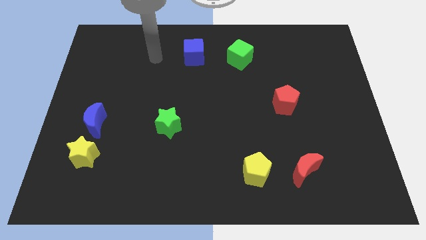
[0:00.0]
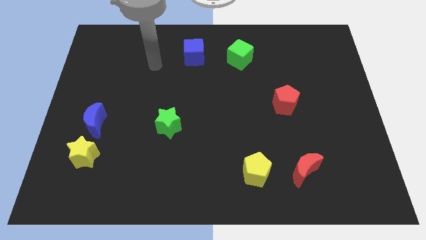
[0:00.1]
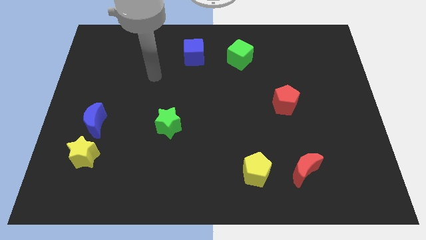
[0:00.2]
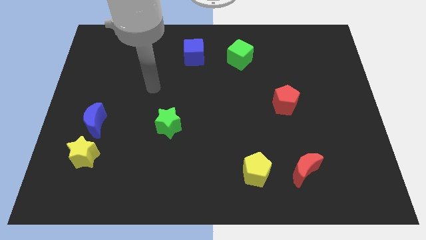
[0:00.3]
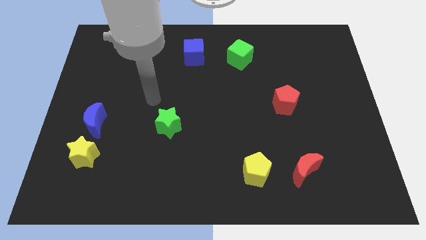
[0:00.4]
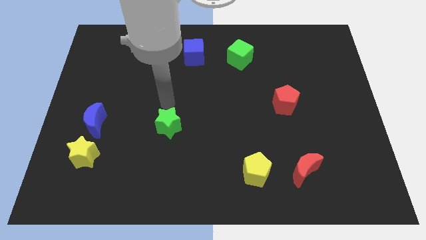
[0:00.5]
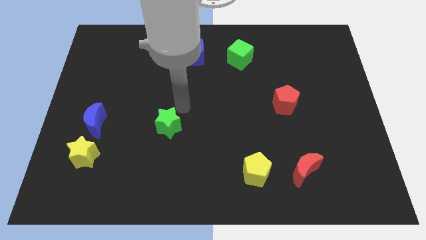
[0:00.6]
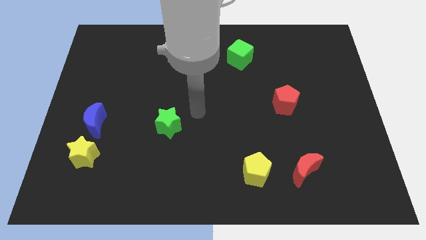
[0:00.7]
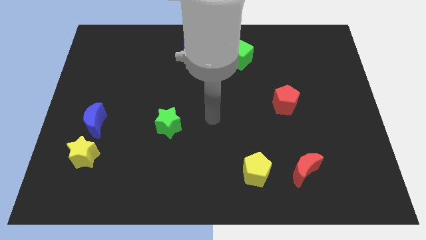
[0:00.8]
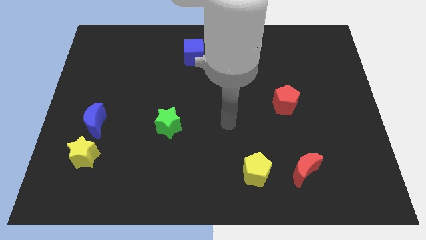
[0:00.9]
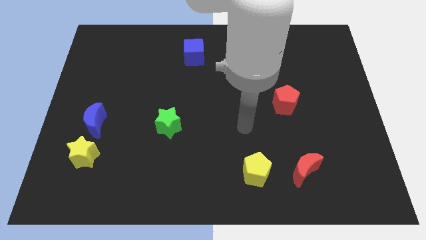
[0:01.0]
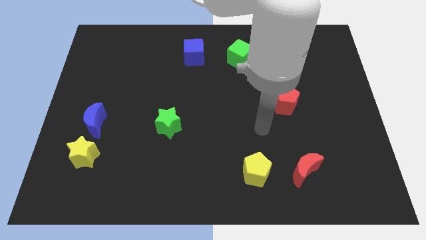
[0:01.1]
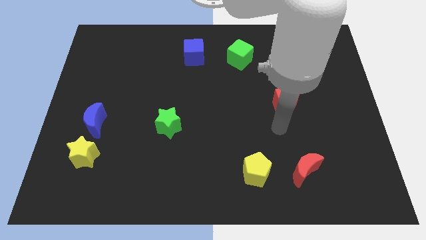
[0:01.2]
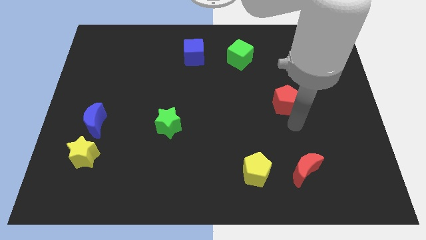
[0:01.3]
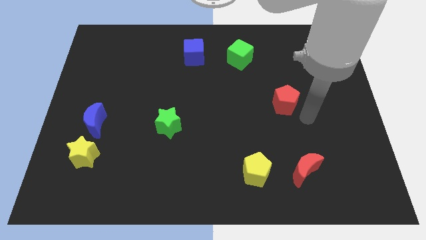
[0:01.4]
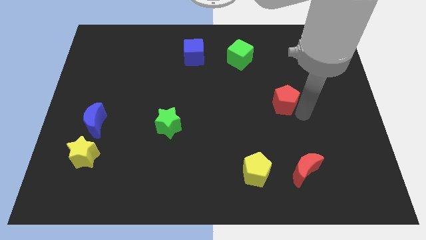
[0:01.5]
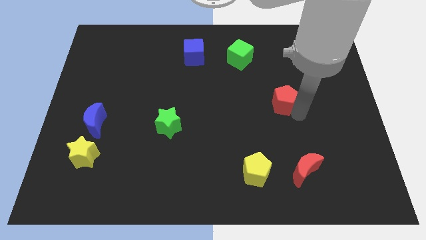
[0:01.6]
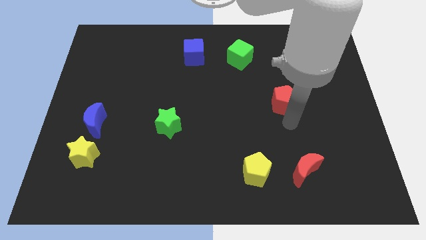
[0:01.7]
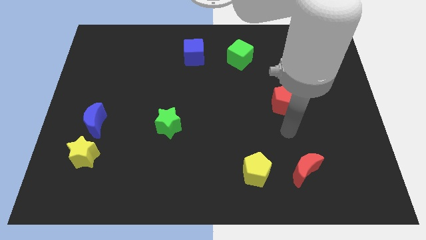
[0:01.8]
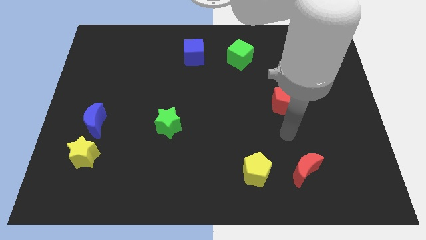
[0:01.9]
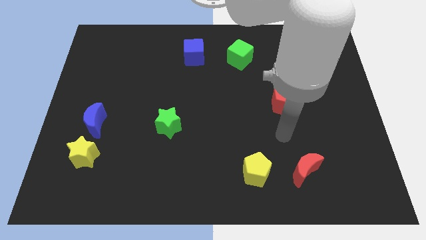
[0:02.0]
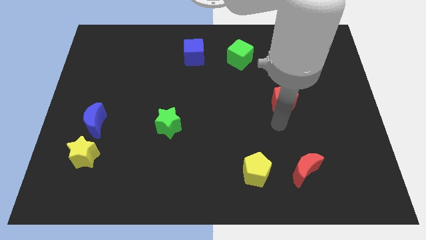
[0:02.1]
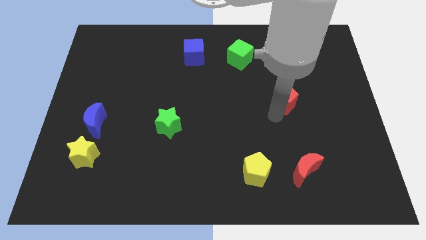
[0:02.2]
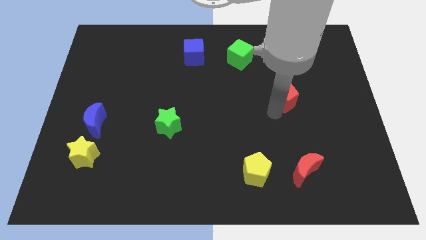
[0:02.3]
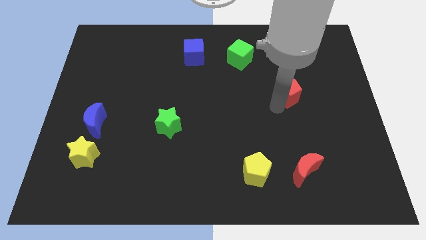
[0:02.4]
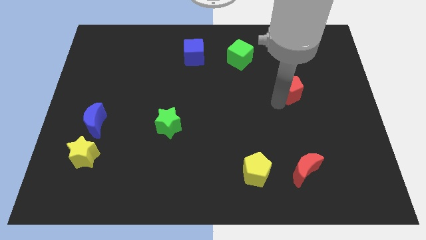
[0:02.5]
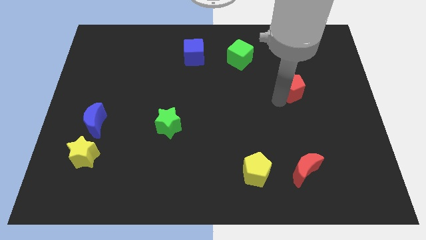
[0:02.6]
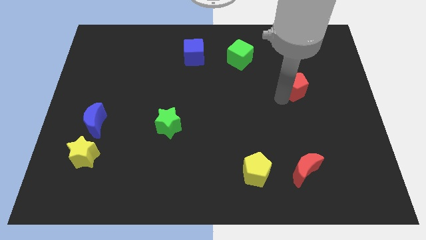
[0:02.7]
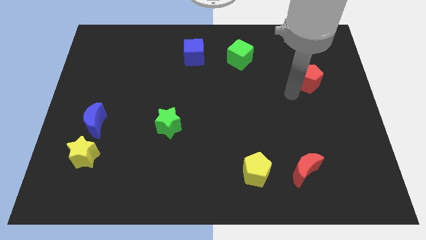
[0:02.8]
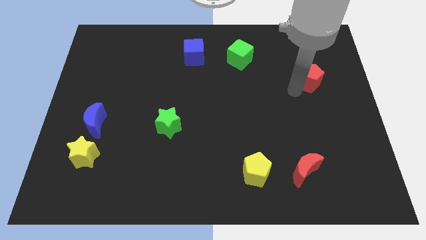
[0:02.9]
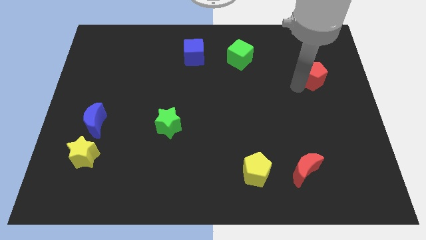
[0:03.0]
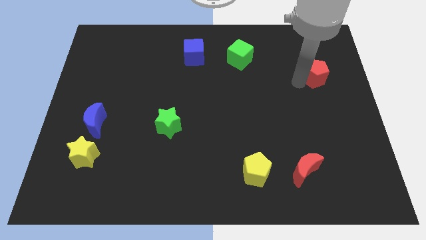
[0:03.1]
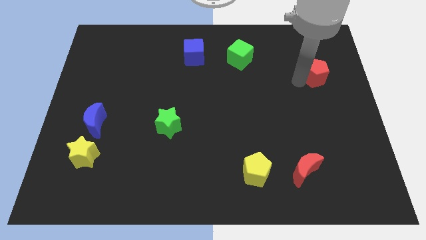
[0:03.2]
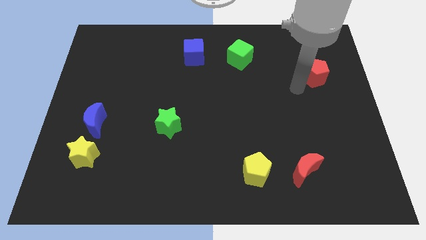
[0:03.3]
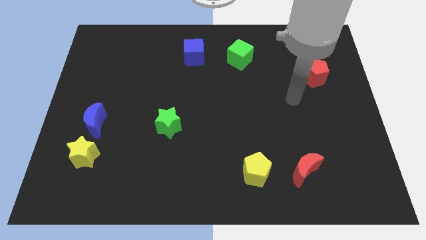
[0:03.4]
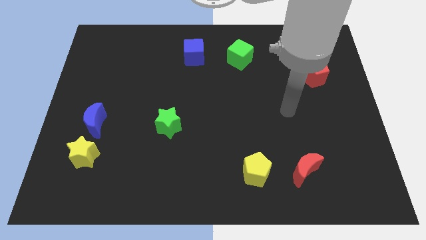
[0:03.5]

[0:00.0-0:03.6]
push the red pentagon slightly towards the top right corner of the board

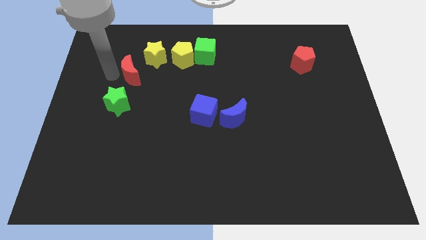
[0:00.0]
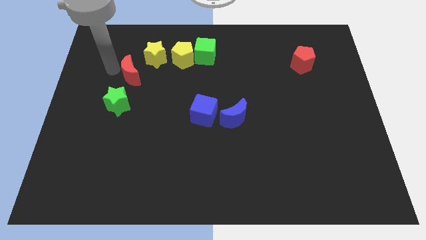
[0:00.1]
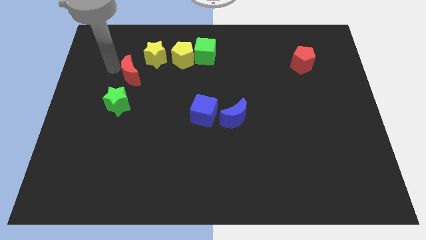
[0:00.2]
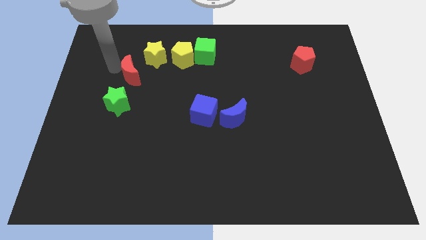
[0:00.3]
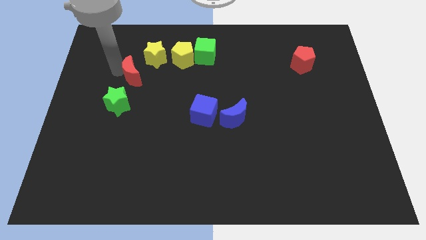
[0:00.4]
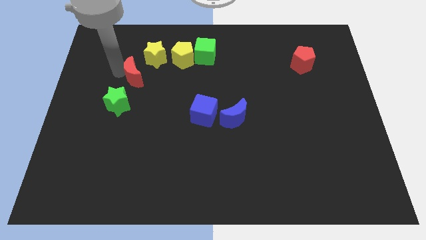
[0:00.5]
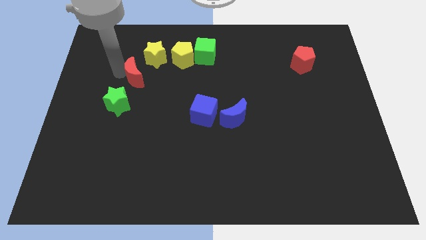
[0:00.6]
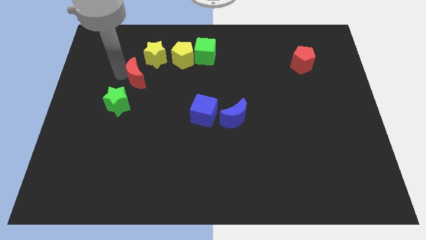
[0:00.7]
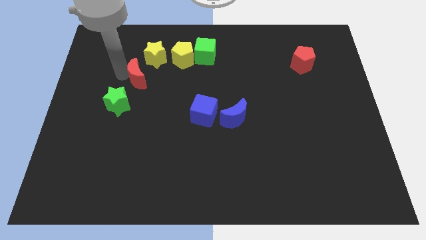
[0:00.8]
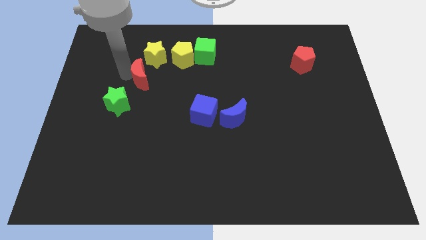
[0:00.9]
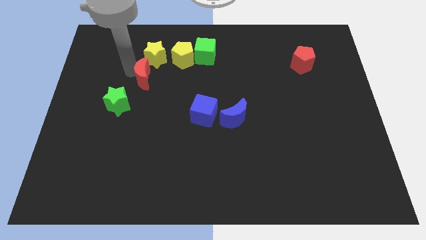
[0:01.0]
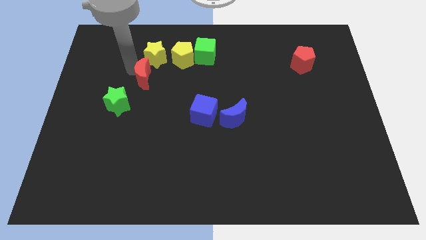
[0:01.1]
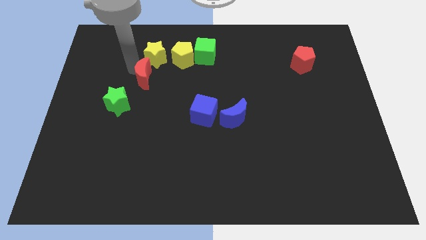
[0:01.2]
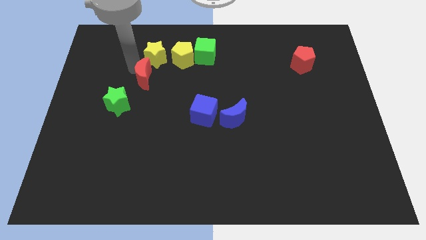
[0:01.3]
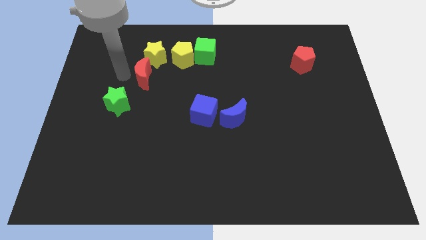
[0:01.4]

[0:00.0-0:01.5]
move the red moon slightly side to the yellow star

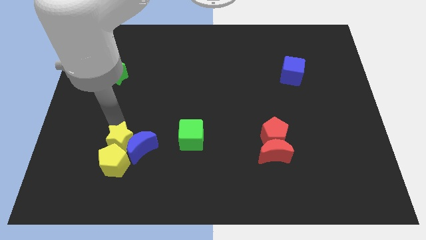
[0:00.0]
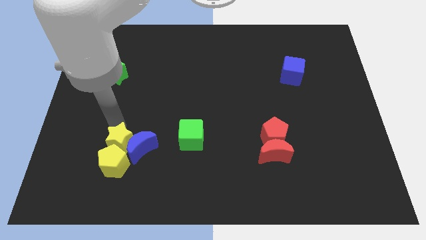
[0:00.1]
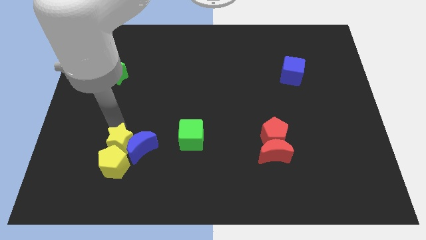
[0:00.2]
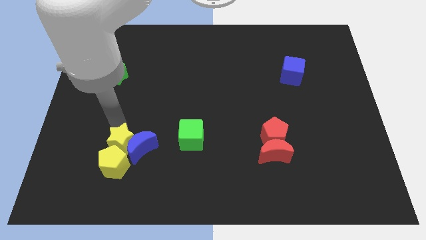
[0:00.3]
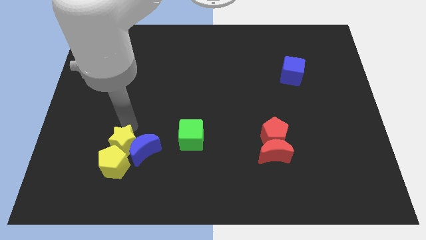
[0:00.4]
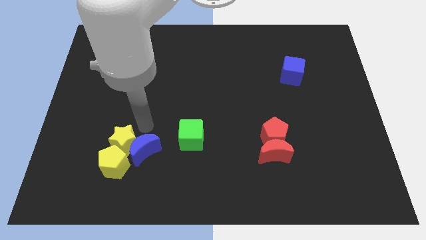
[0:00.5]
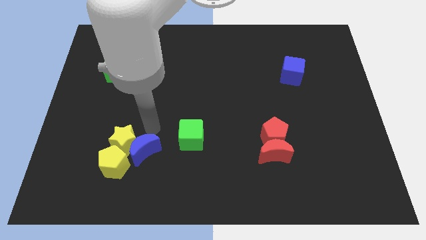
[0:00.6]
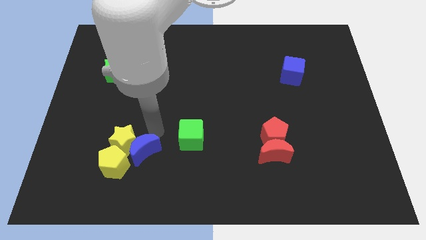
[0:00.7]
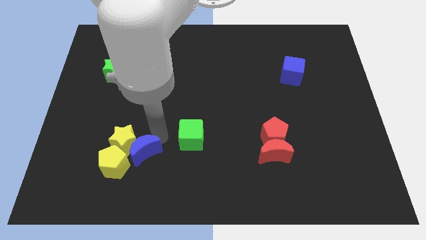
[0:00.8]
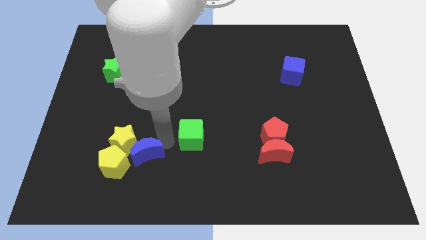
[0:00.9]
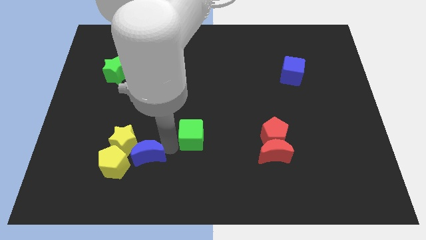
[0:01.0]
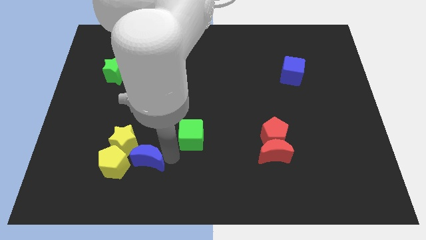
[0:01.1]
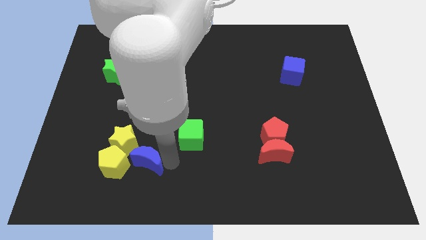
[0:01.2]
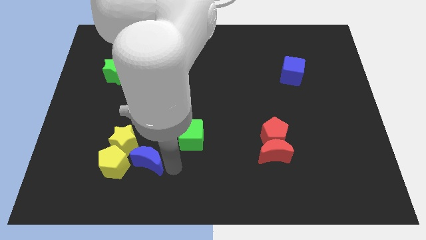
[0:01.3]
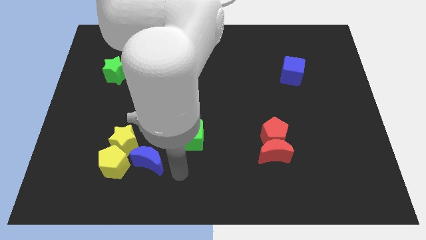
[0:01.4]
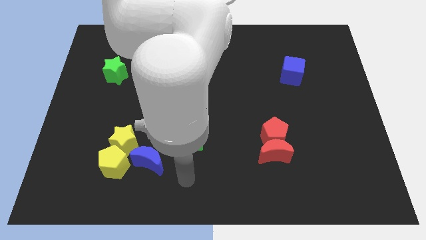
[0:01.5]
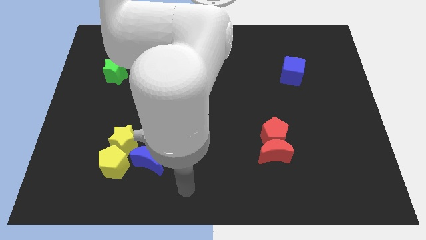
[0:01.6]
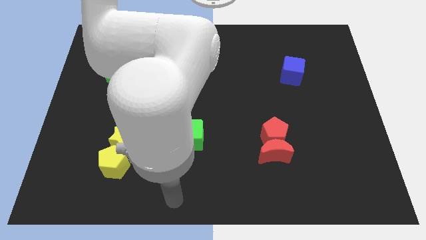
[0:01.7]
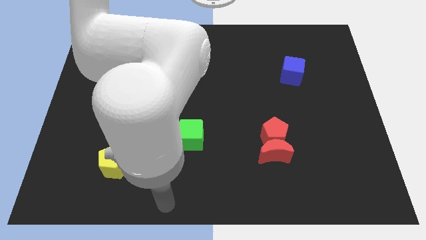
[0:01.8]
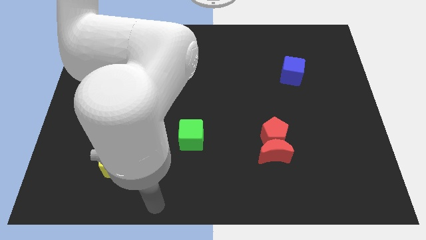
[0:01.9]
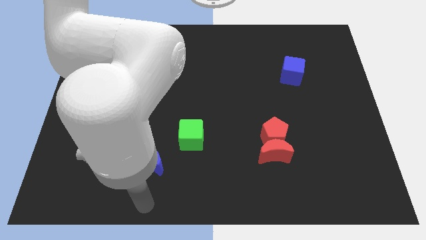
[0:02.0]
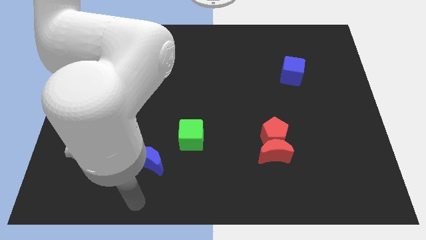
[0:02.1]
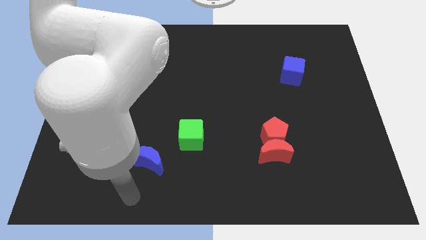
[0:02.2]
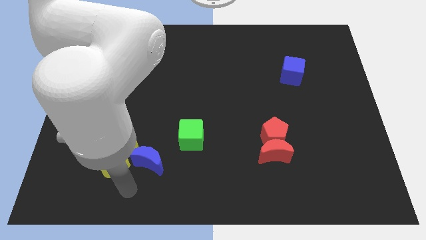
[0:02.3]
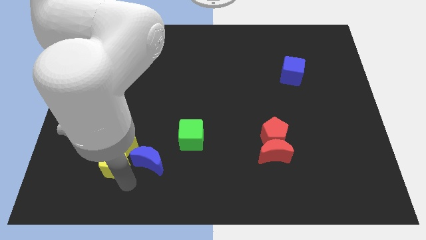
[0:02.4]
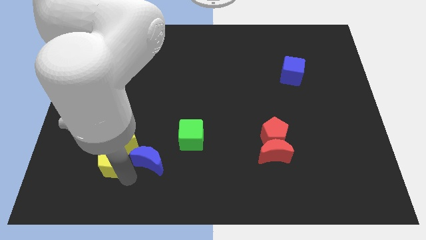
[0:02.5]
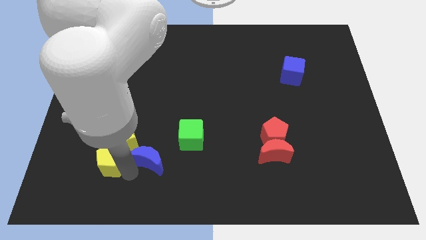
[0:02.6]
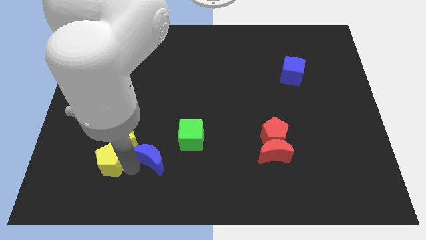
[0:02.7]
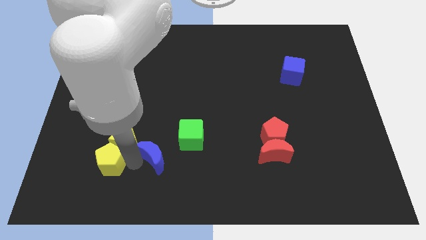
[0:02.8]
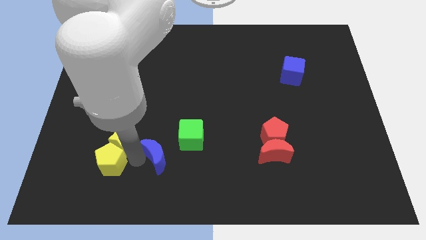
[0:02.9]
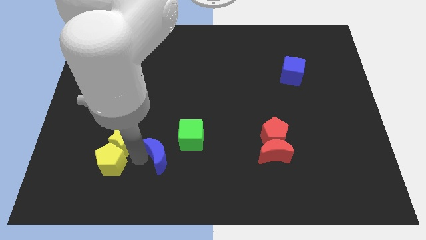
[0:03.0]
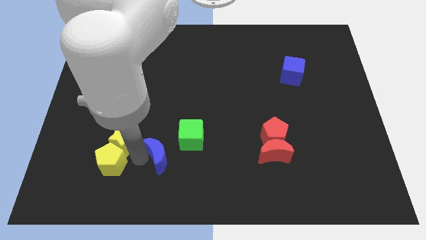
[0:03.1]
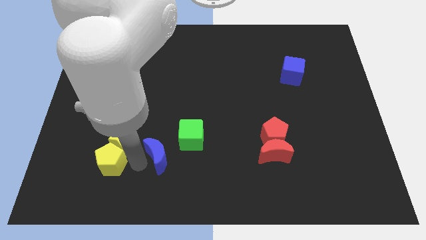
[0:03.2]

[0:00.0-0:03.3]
separate the yellow star and blue crescent

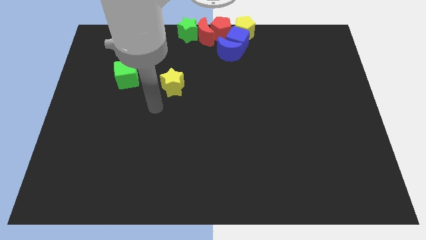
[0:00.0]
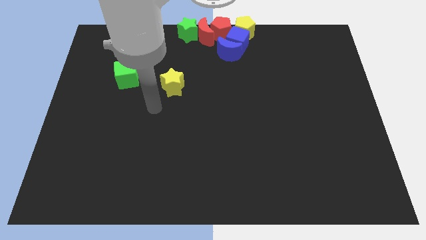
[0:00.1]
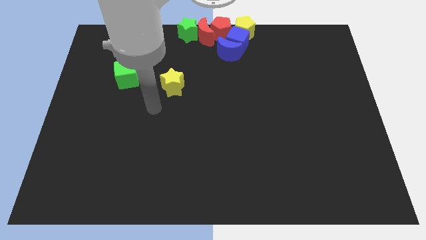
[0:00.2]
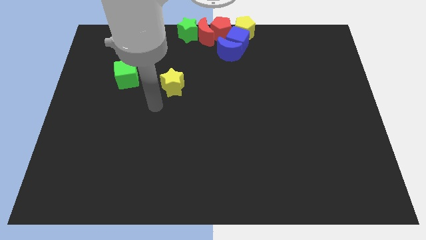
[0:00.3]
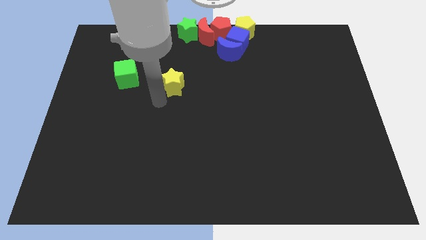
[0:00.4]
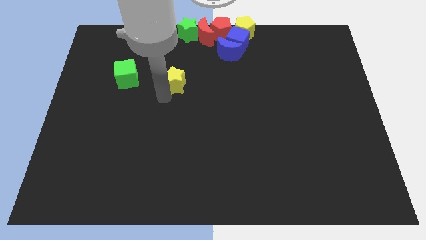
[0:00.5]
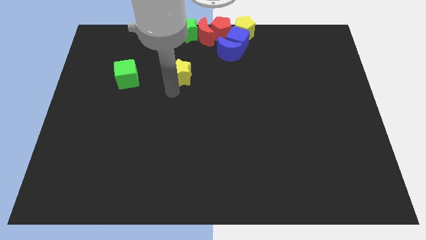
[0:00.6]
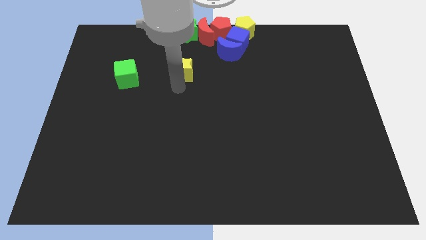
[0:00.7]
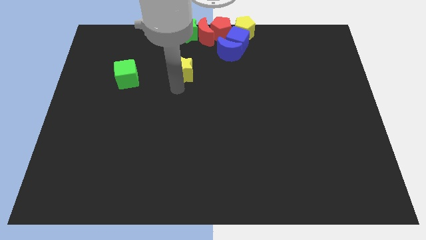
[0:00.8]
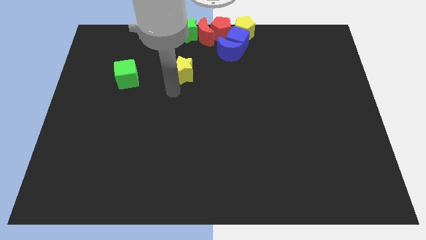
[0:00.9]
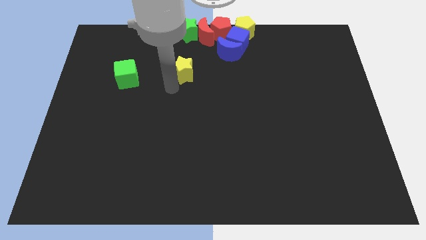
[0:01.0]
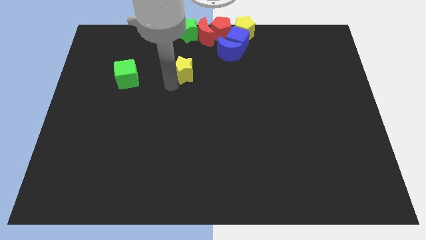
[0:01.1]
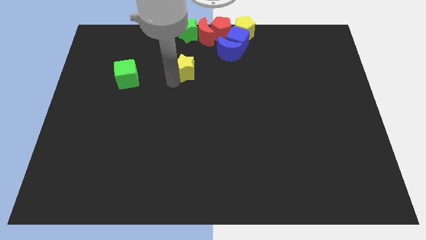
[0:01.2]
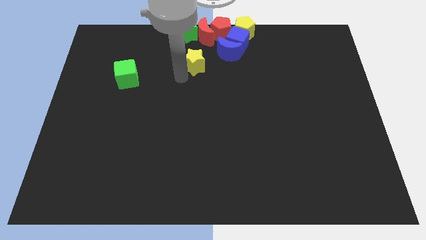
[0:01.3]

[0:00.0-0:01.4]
move the yellow star vertically below the green star
